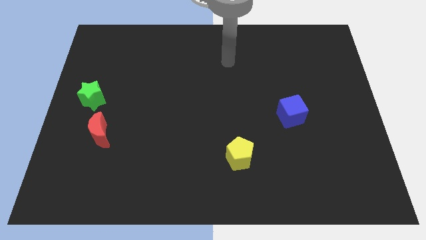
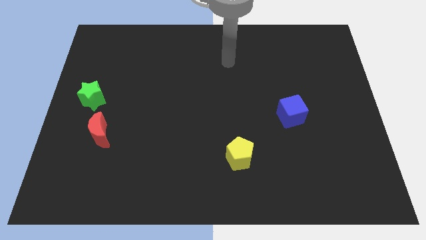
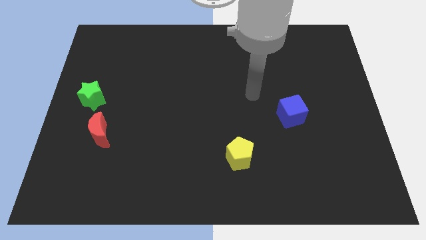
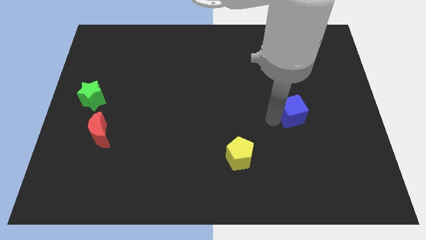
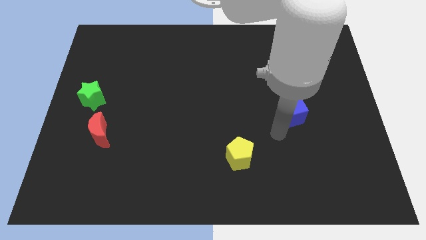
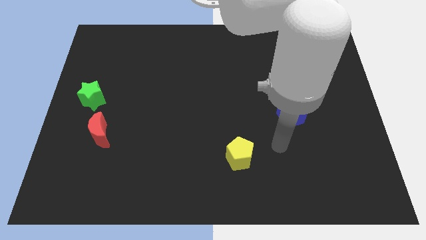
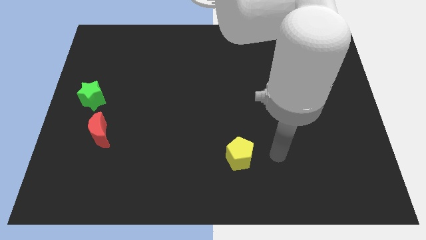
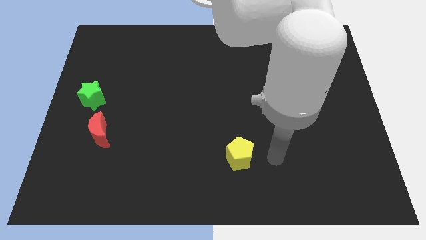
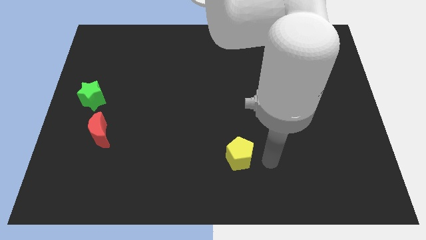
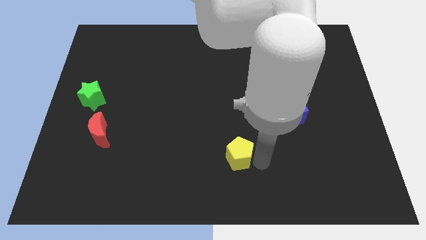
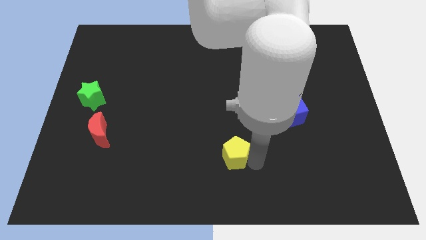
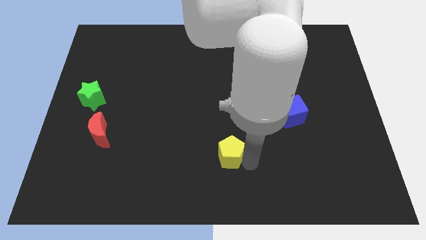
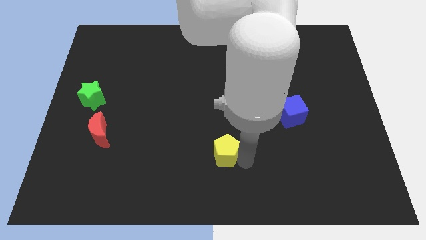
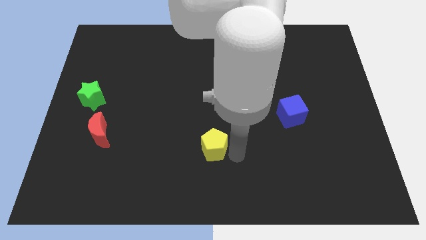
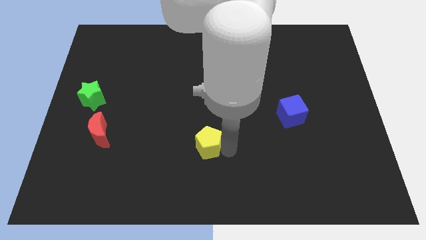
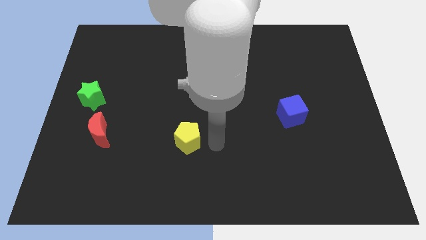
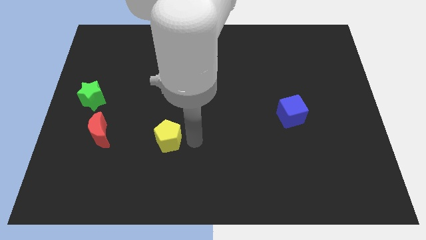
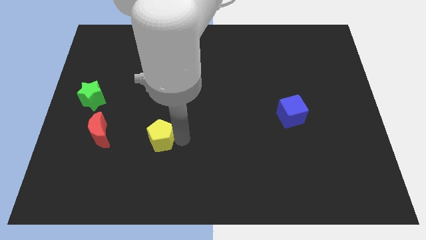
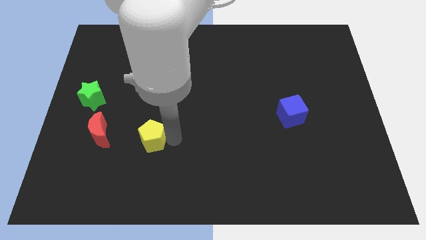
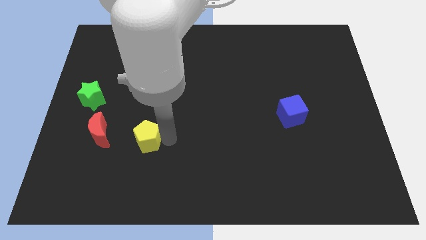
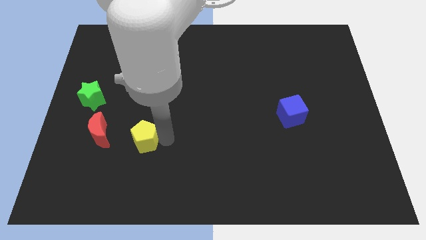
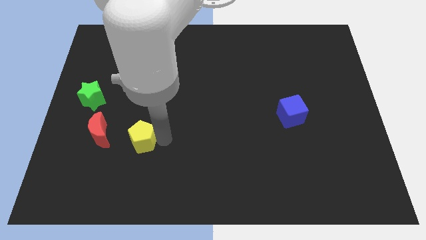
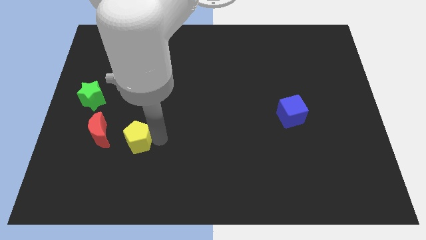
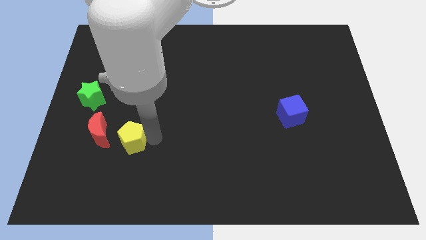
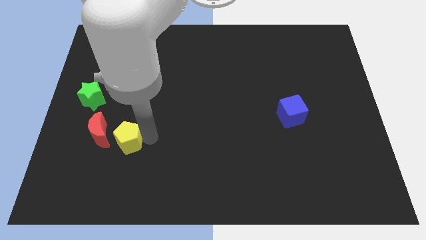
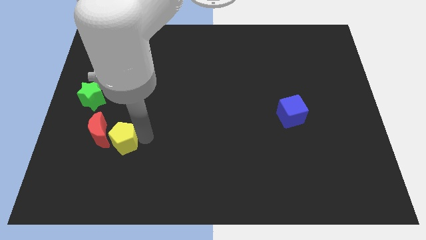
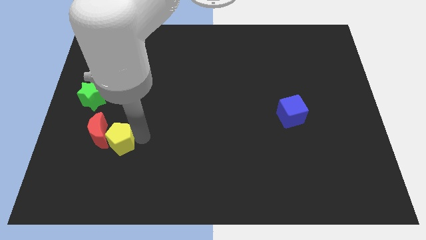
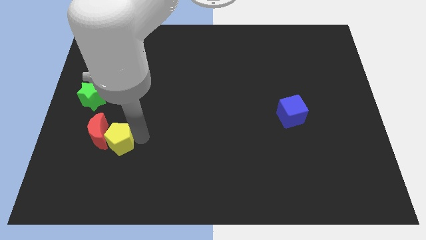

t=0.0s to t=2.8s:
push the yellow pentagon close to the moon

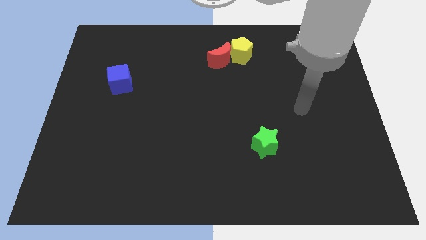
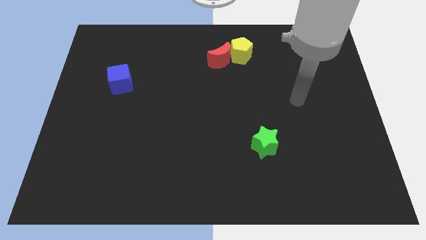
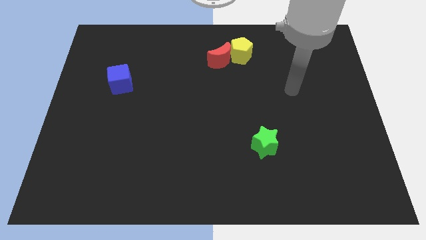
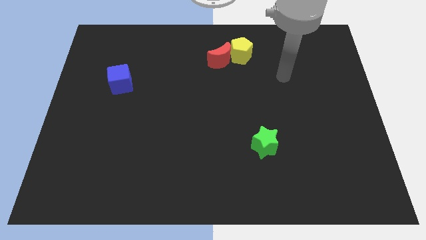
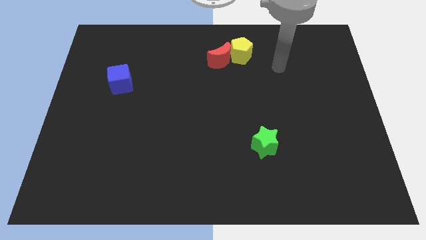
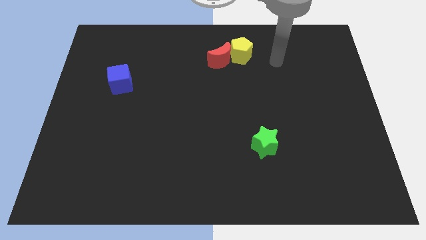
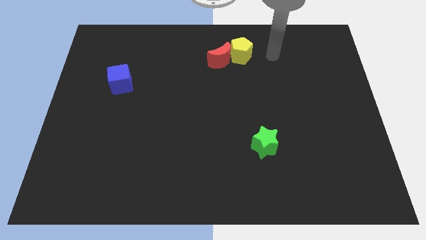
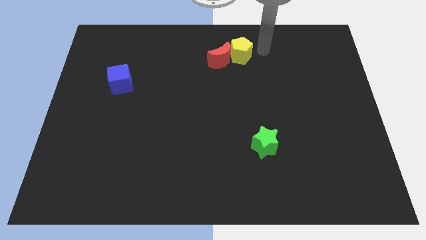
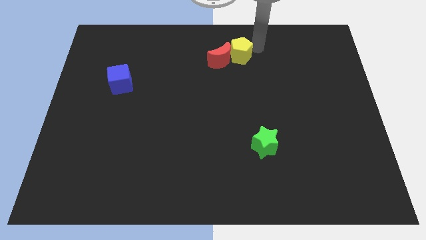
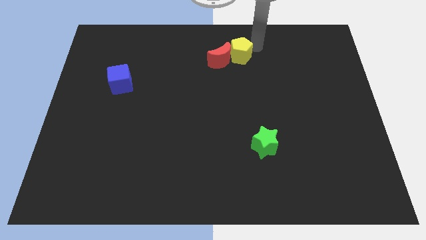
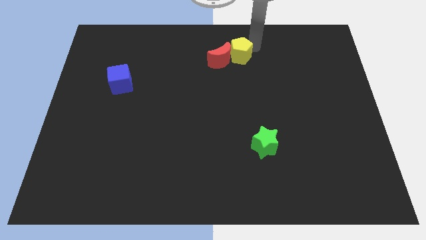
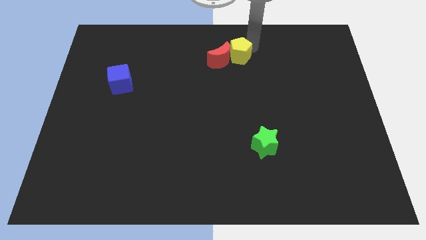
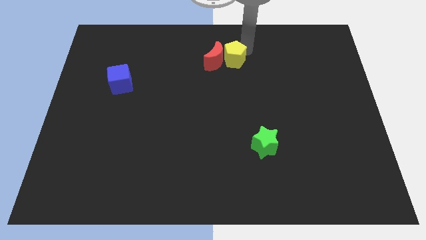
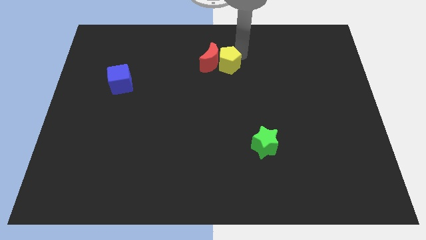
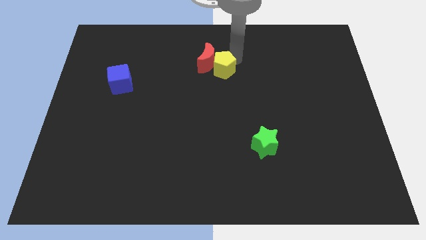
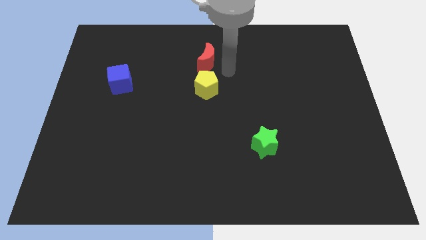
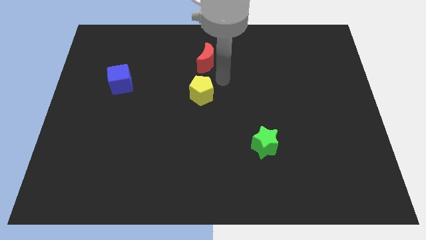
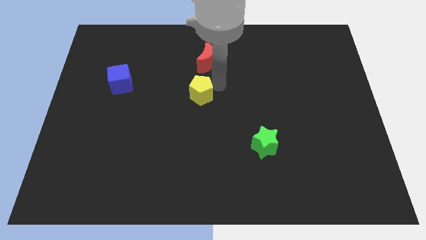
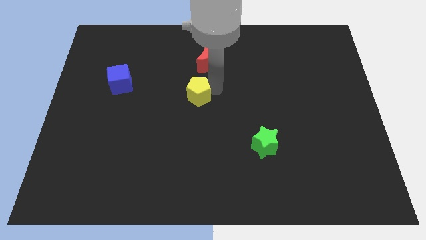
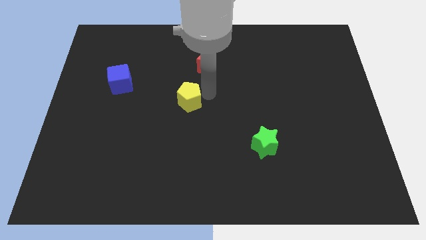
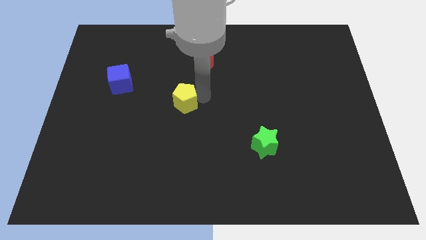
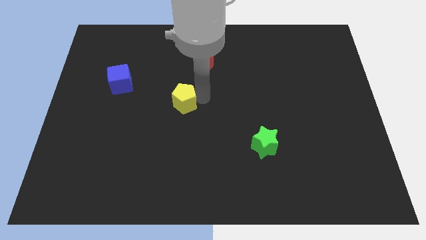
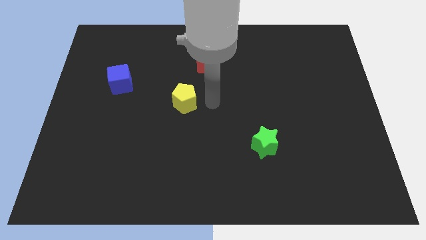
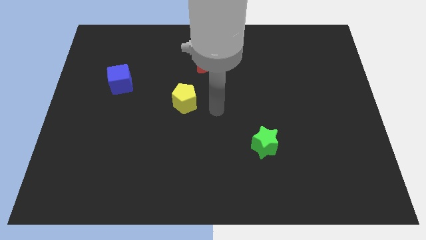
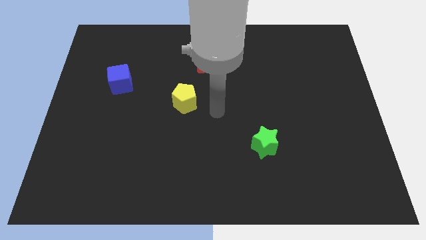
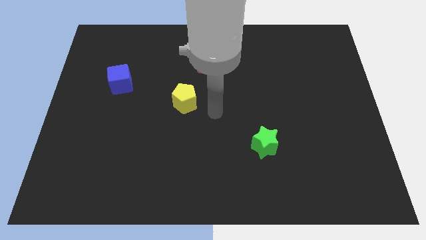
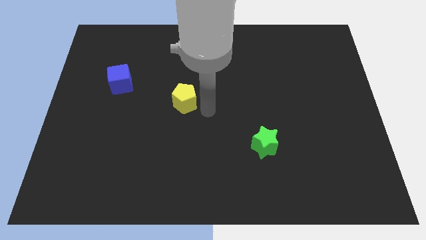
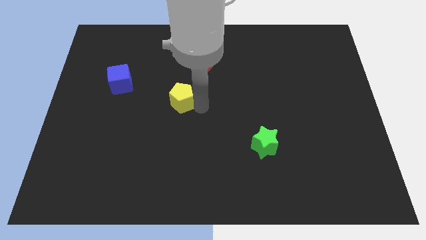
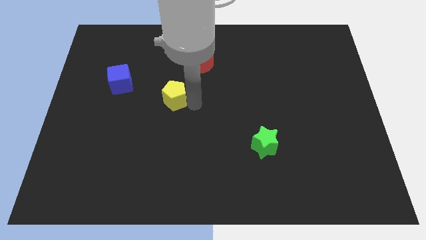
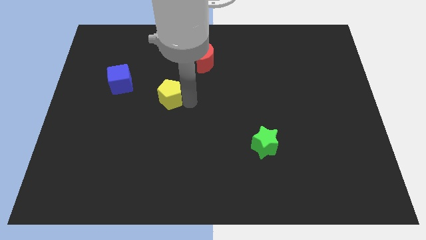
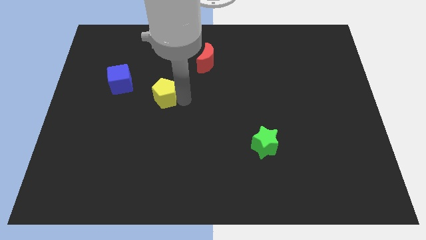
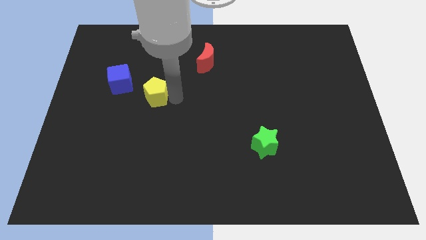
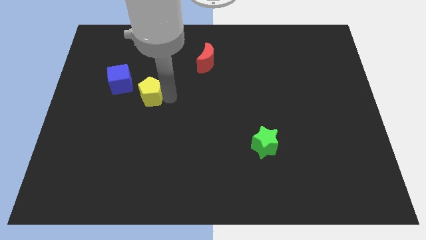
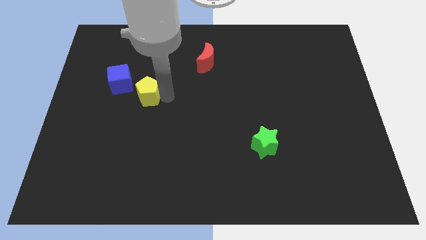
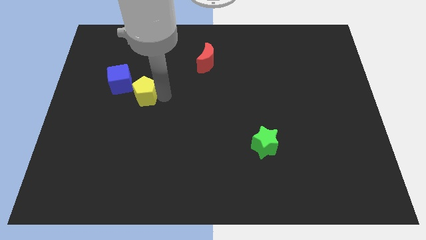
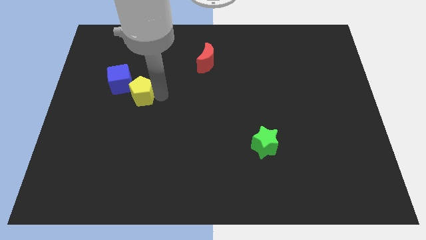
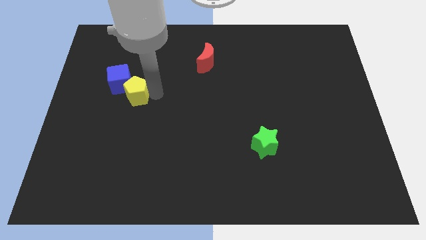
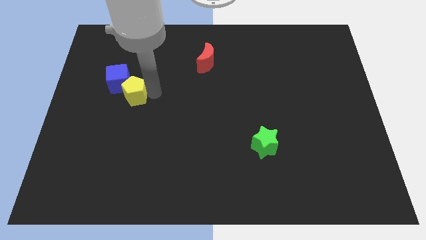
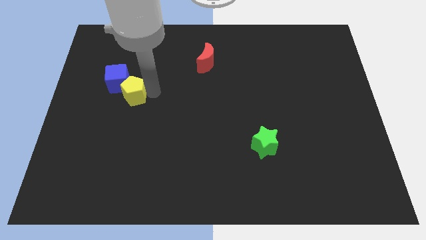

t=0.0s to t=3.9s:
move the yellow block close to the cube

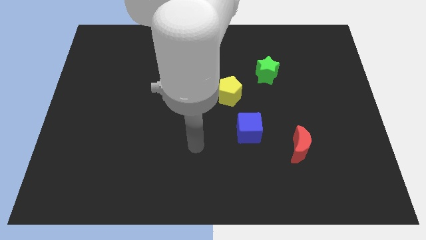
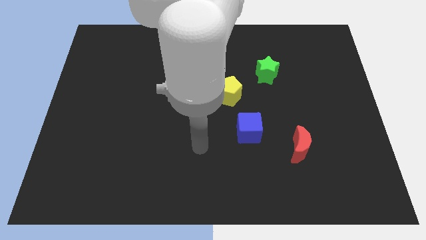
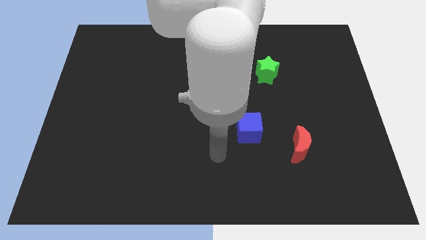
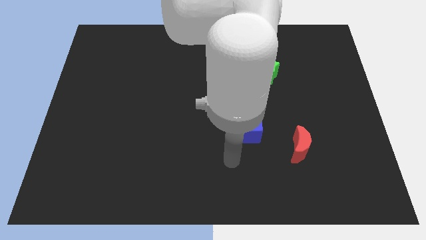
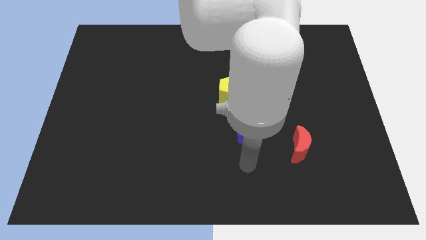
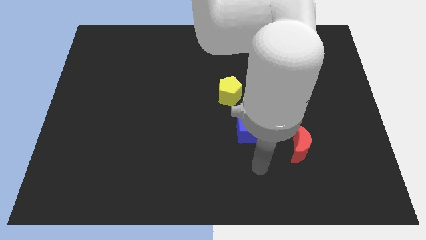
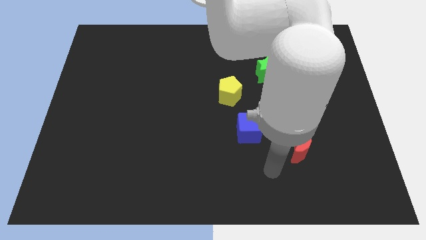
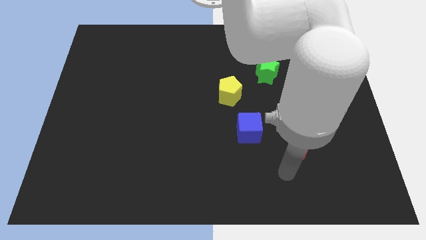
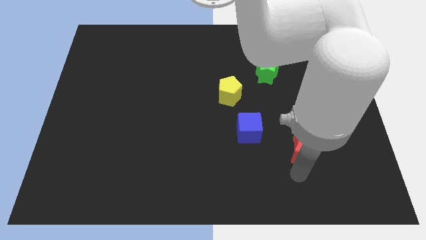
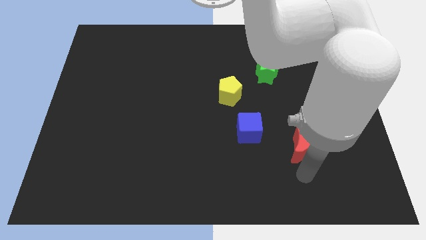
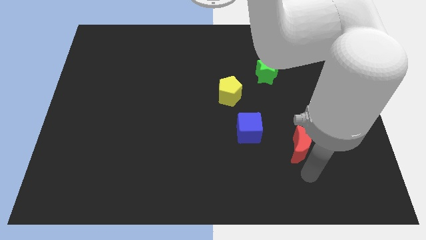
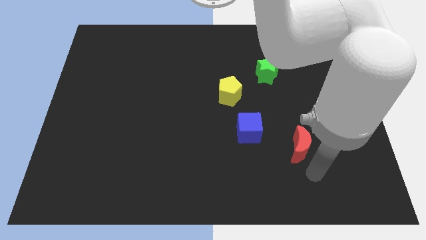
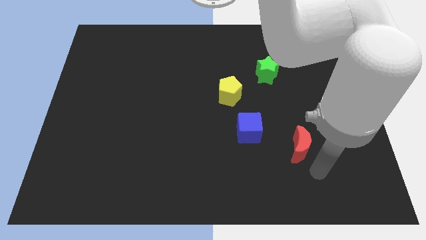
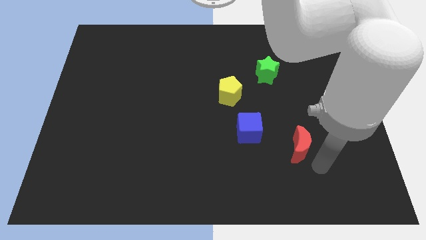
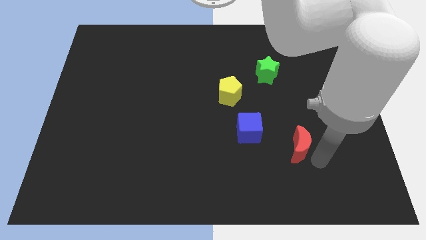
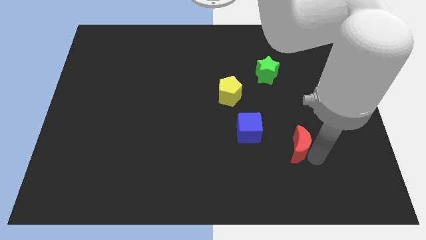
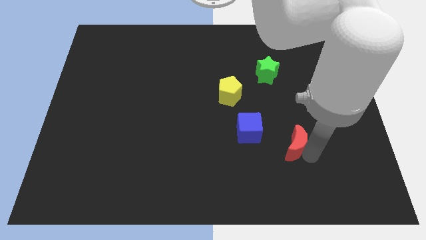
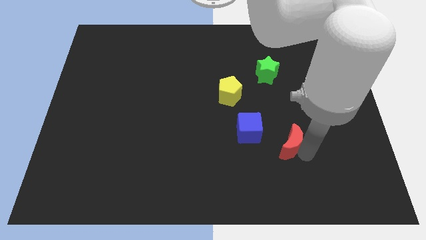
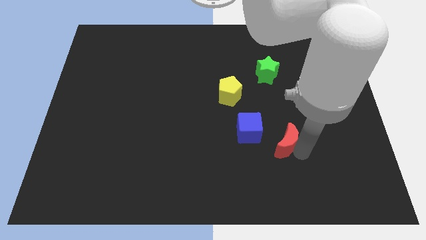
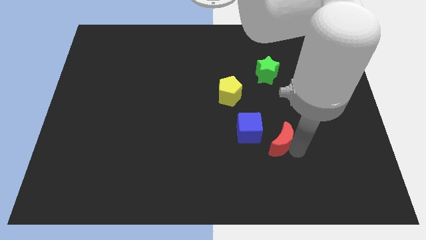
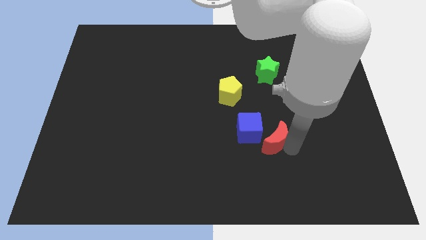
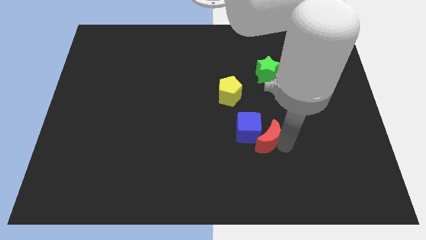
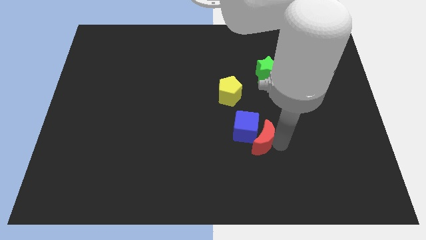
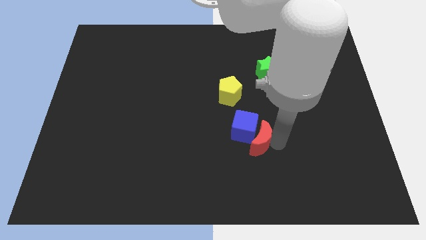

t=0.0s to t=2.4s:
push the red block close to the blue cube
